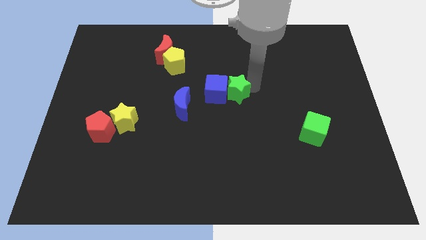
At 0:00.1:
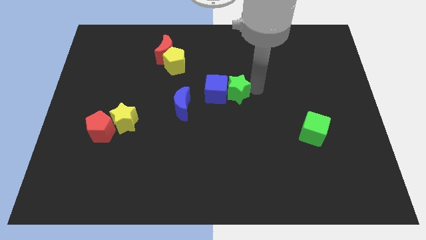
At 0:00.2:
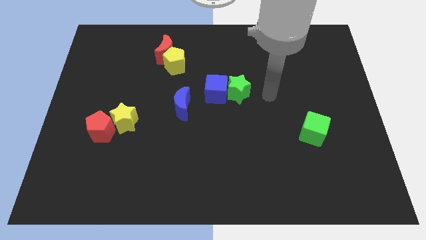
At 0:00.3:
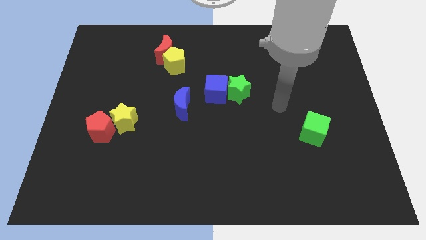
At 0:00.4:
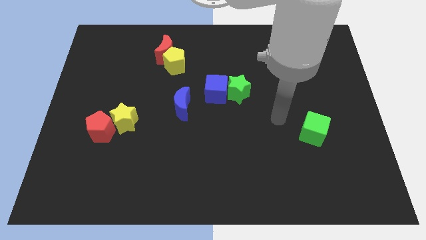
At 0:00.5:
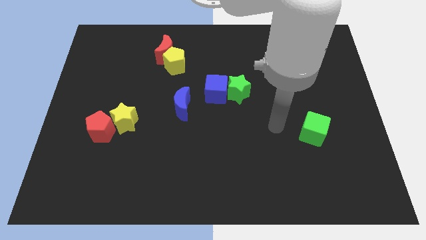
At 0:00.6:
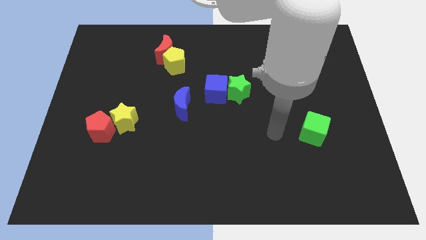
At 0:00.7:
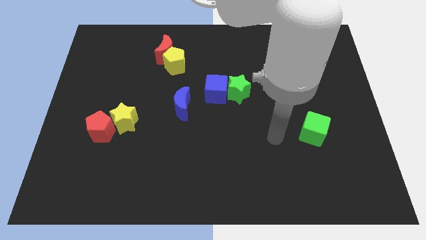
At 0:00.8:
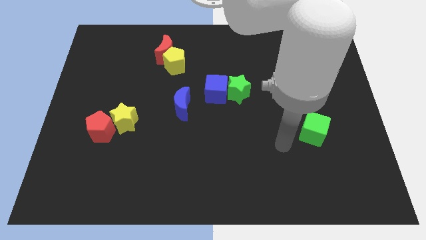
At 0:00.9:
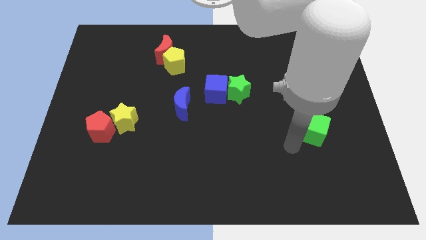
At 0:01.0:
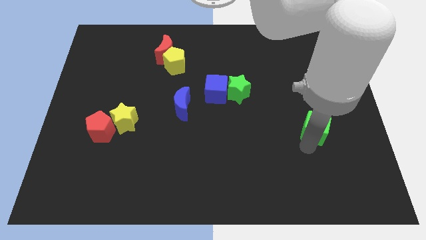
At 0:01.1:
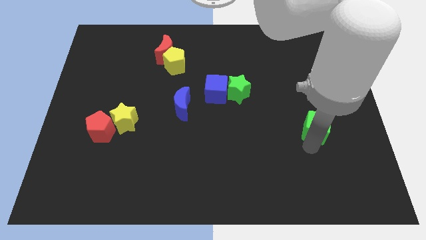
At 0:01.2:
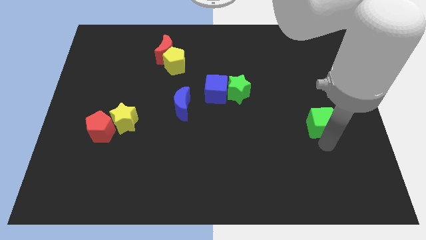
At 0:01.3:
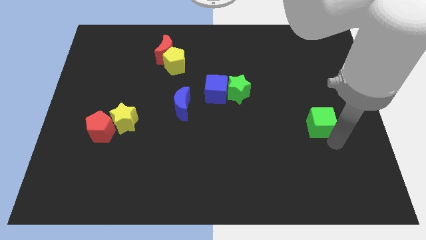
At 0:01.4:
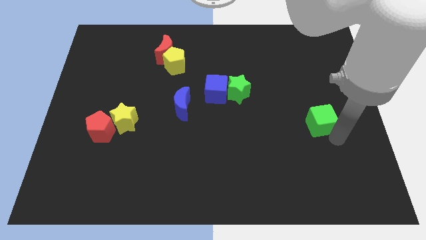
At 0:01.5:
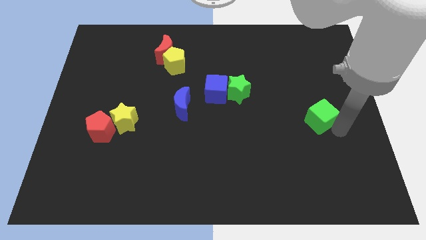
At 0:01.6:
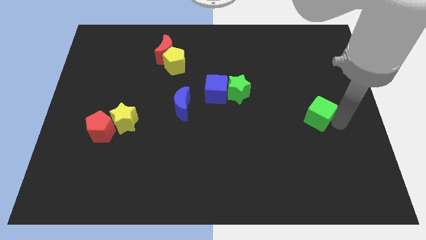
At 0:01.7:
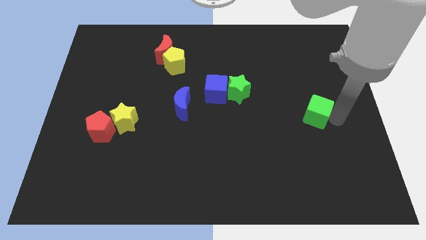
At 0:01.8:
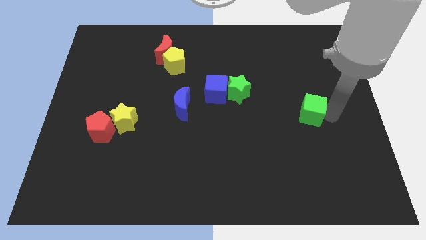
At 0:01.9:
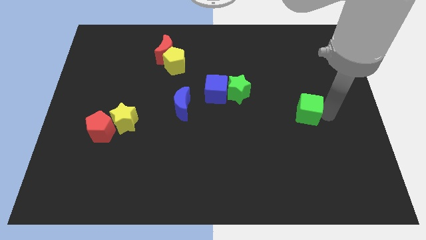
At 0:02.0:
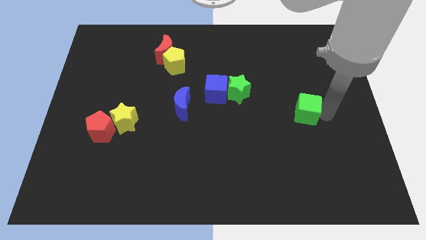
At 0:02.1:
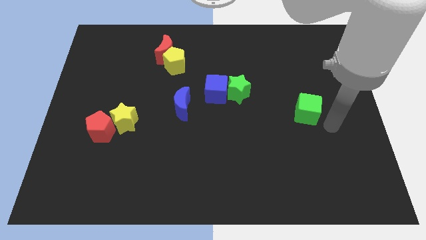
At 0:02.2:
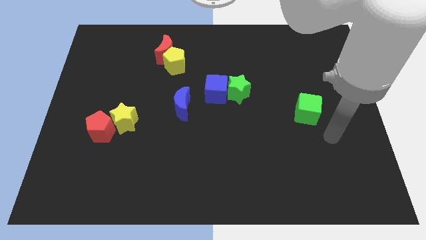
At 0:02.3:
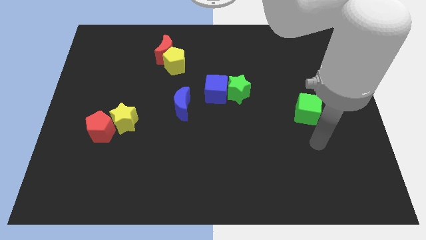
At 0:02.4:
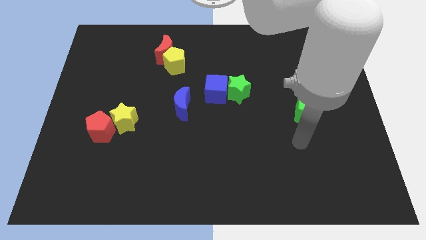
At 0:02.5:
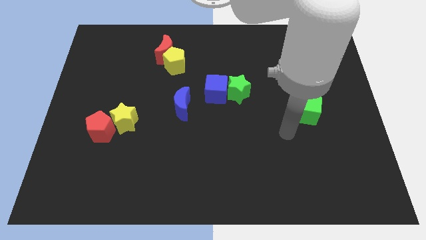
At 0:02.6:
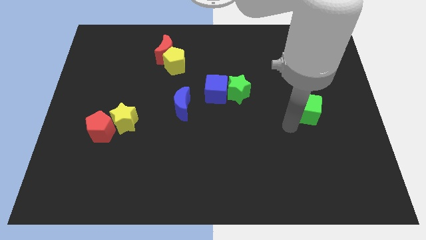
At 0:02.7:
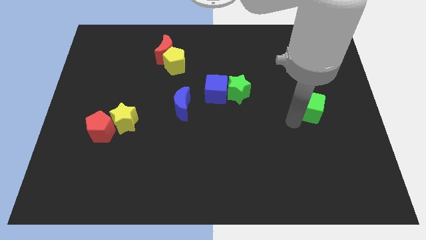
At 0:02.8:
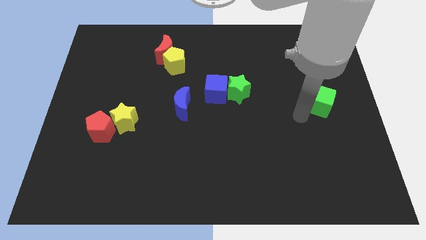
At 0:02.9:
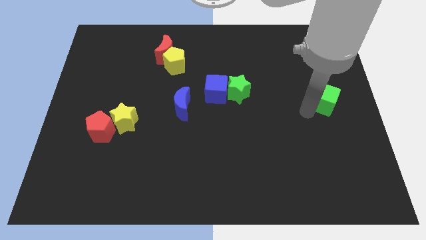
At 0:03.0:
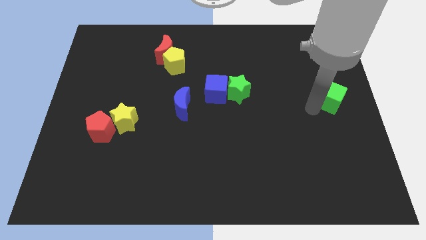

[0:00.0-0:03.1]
move the green cube to the right of the board

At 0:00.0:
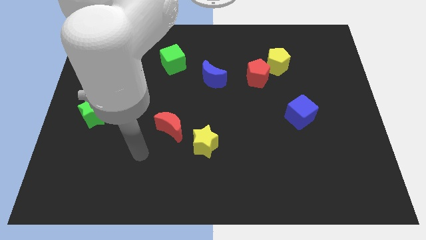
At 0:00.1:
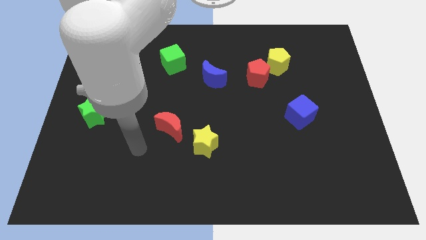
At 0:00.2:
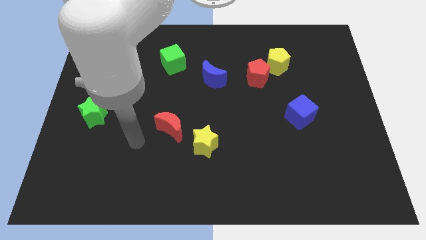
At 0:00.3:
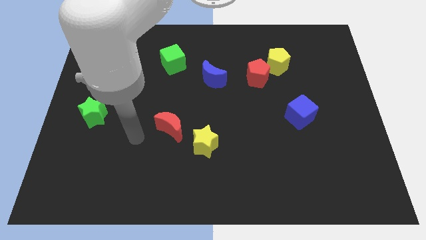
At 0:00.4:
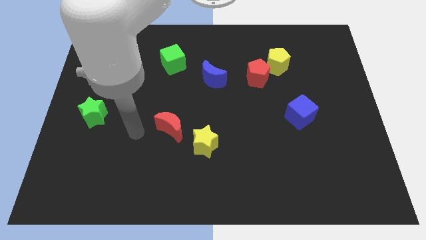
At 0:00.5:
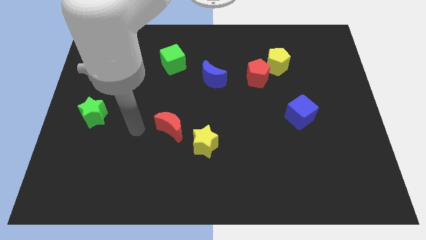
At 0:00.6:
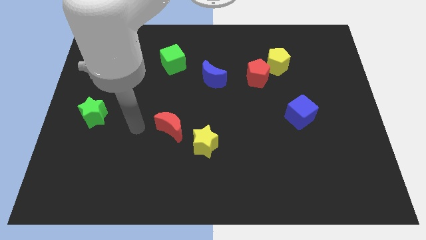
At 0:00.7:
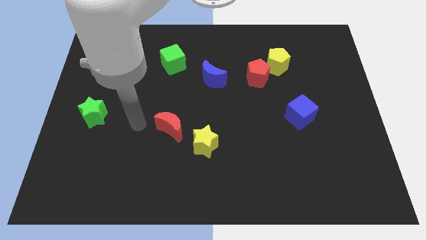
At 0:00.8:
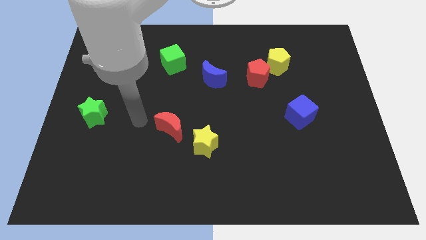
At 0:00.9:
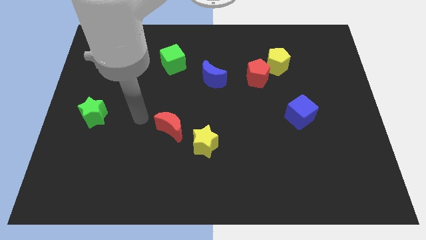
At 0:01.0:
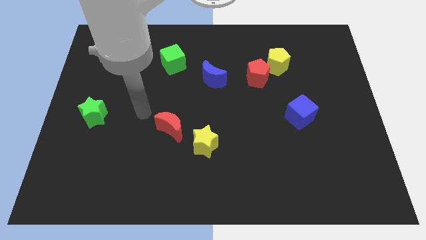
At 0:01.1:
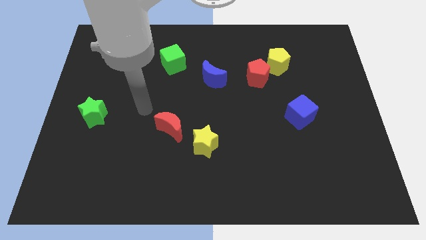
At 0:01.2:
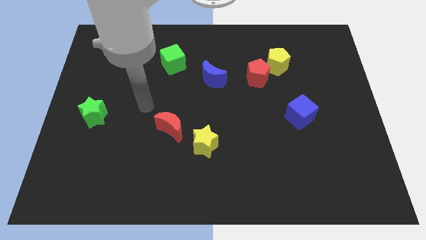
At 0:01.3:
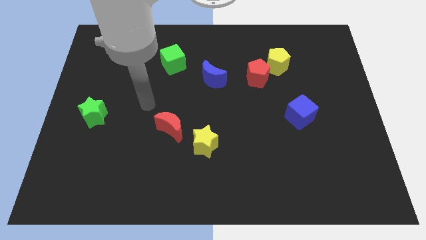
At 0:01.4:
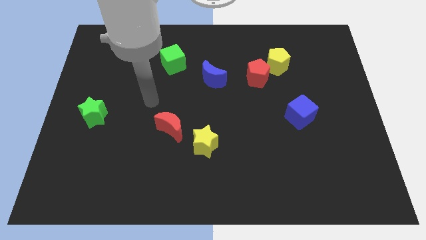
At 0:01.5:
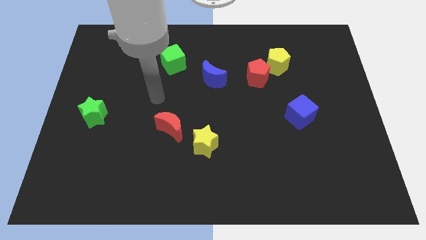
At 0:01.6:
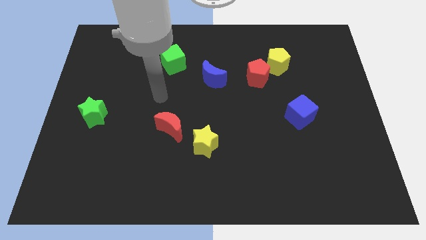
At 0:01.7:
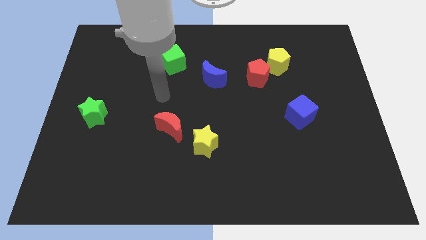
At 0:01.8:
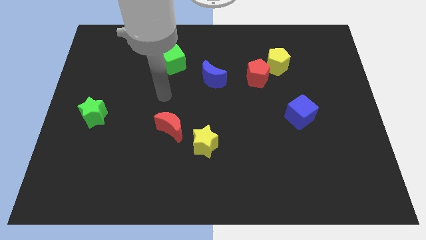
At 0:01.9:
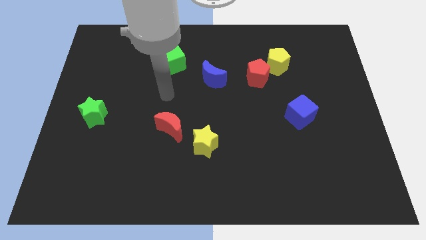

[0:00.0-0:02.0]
place the arm in between the green cube and red crescent

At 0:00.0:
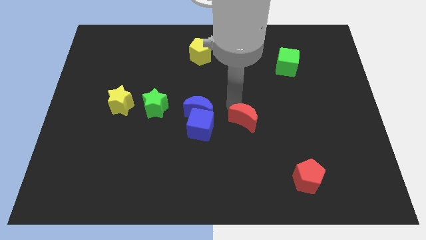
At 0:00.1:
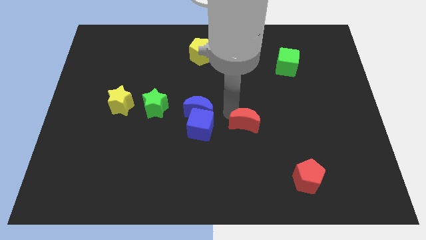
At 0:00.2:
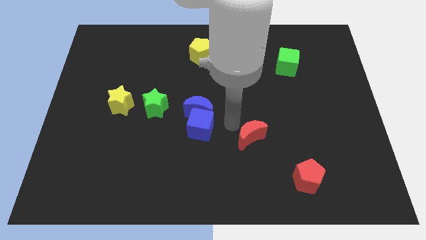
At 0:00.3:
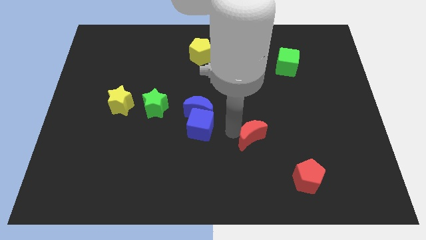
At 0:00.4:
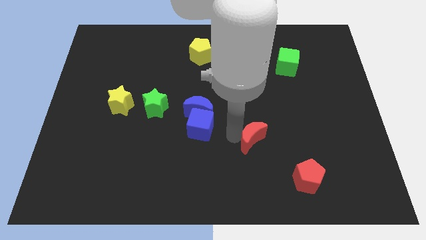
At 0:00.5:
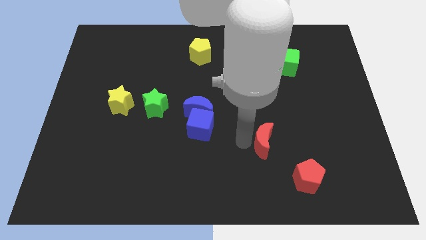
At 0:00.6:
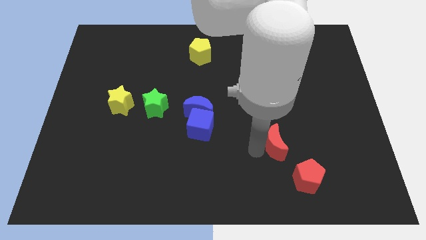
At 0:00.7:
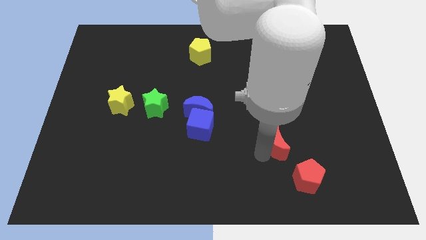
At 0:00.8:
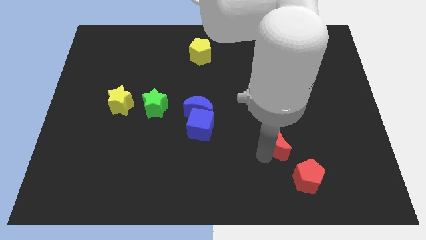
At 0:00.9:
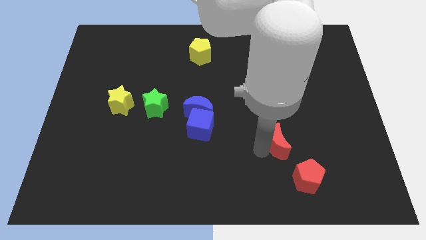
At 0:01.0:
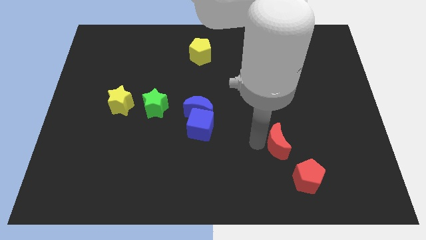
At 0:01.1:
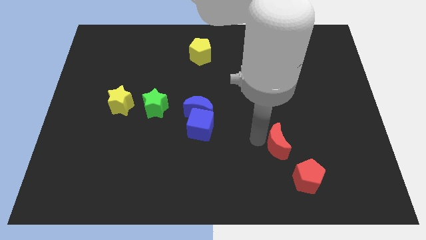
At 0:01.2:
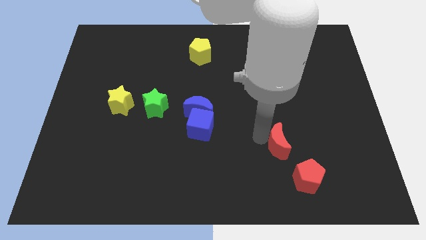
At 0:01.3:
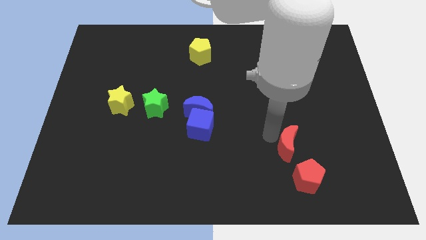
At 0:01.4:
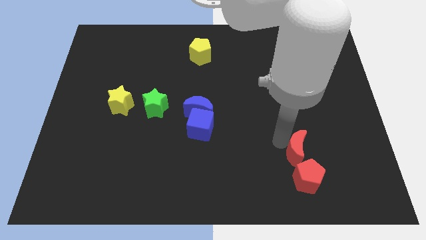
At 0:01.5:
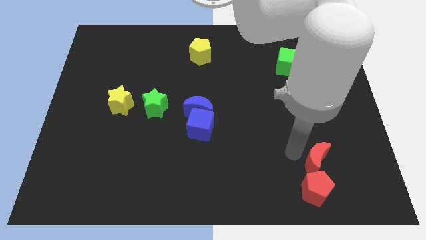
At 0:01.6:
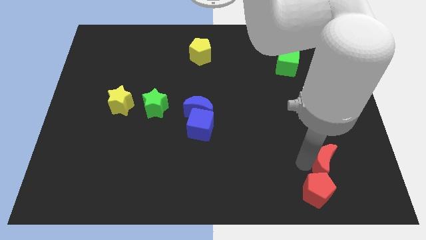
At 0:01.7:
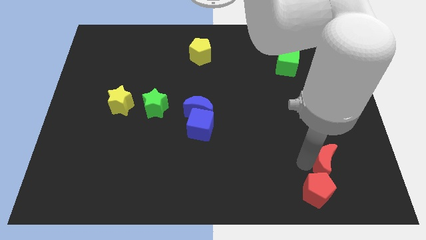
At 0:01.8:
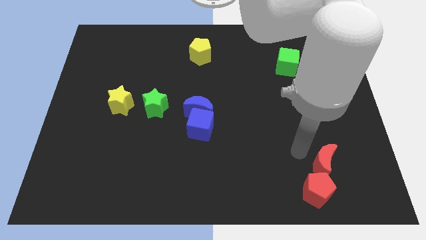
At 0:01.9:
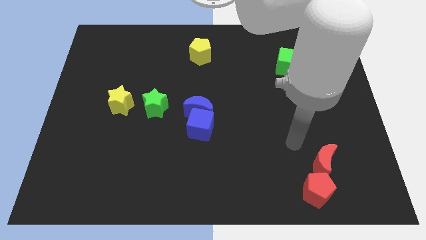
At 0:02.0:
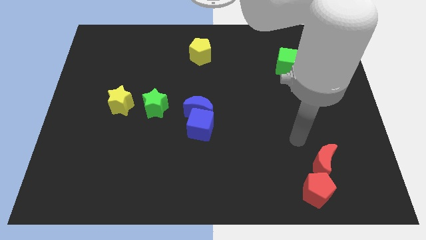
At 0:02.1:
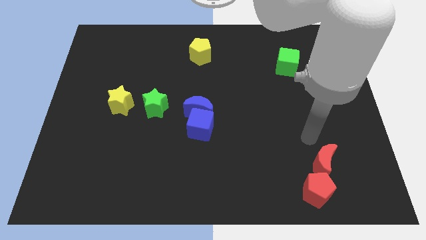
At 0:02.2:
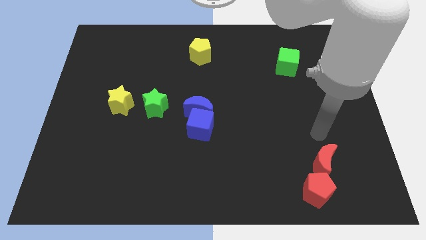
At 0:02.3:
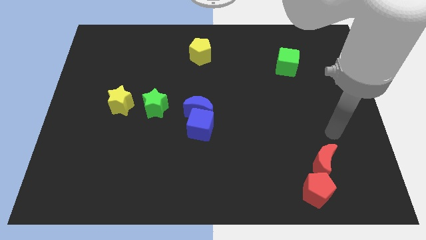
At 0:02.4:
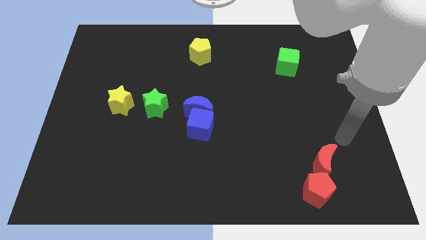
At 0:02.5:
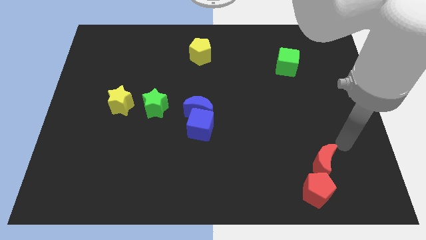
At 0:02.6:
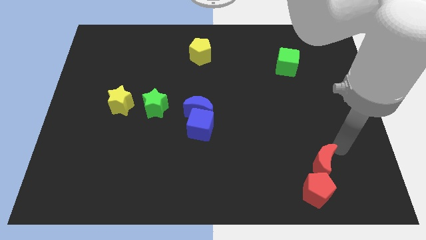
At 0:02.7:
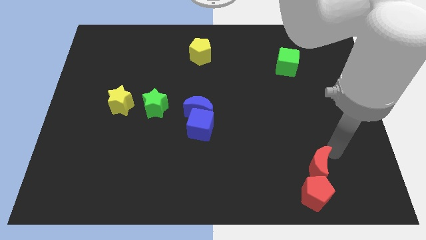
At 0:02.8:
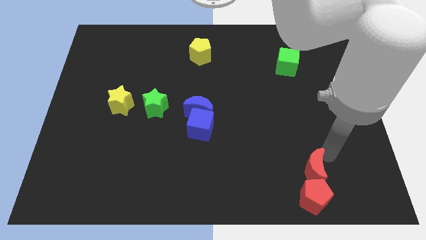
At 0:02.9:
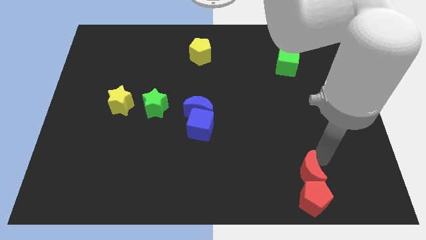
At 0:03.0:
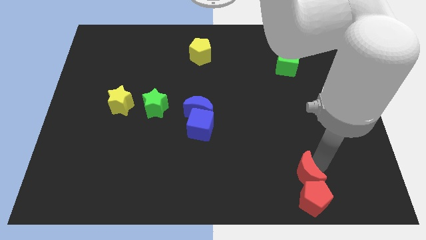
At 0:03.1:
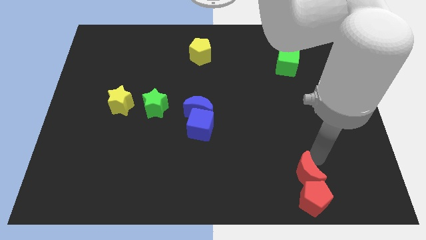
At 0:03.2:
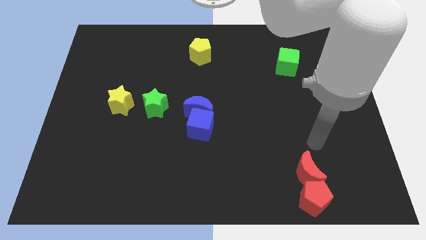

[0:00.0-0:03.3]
move the red moon into the red pentagon

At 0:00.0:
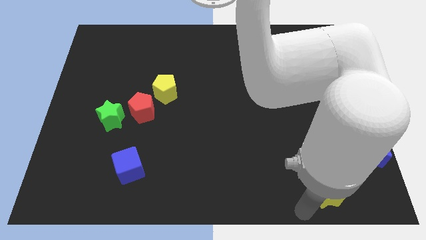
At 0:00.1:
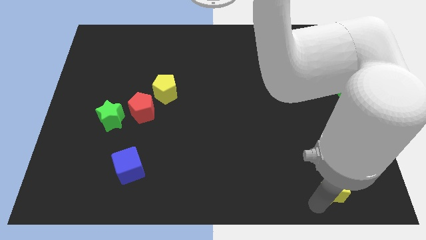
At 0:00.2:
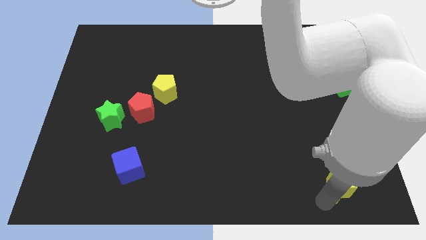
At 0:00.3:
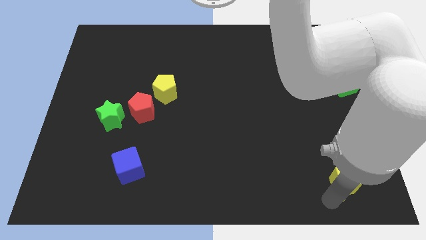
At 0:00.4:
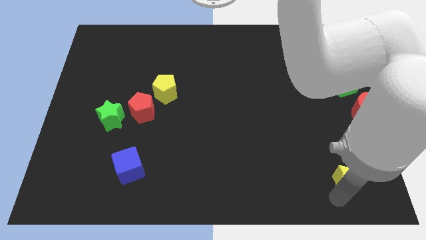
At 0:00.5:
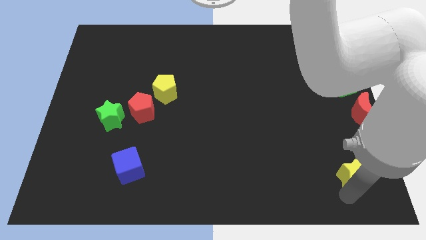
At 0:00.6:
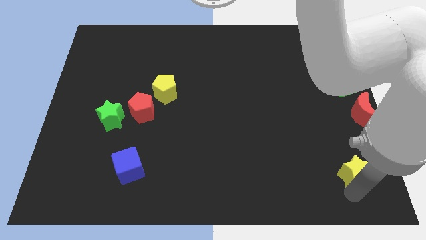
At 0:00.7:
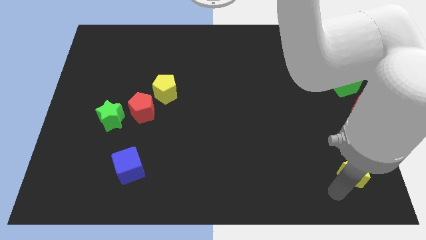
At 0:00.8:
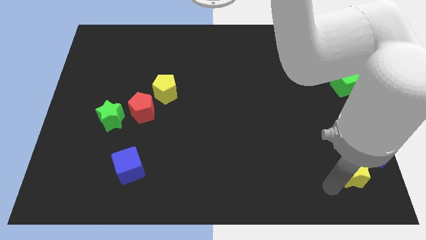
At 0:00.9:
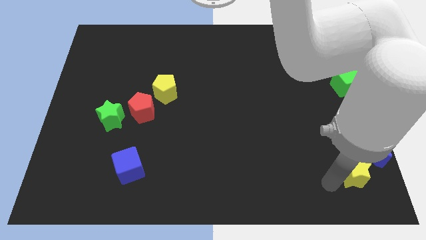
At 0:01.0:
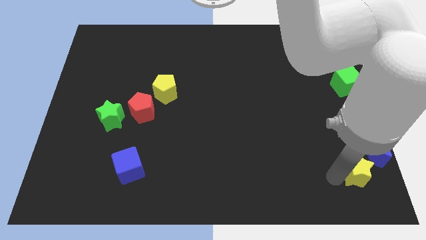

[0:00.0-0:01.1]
move yellow star slightly towards the blue crescent
